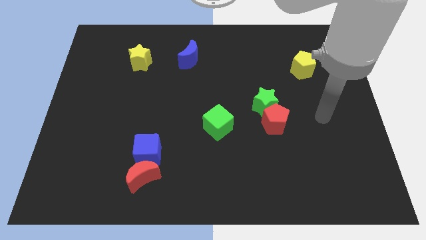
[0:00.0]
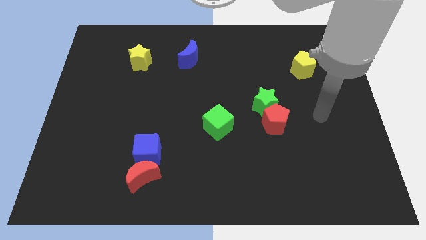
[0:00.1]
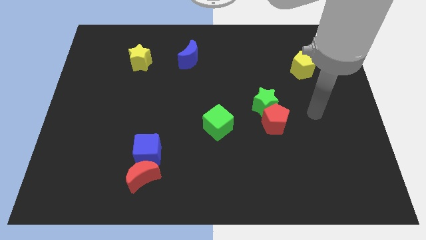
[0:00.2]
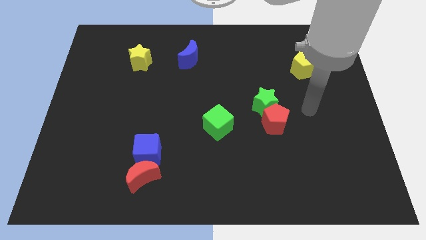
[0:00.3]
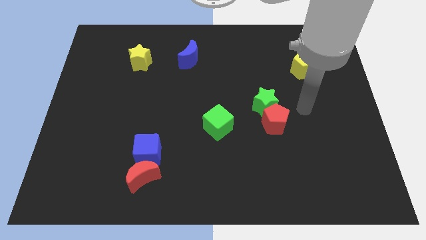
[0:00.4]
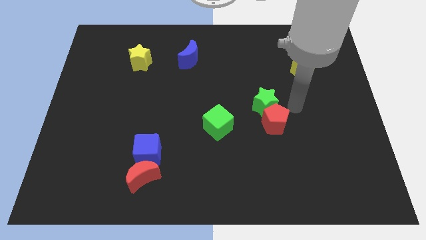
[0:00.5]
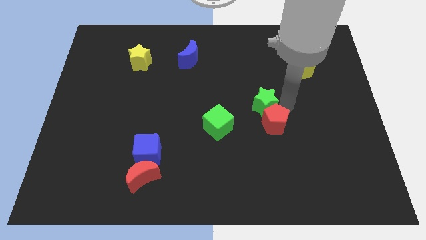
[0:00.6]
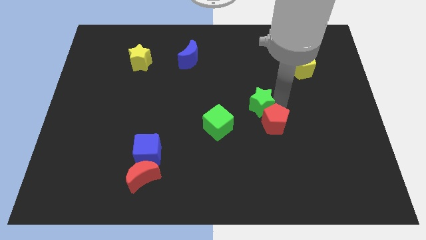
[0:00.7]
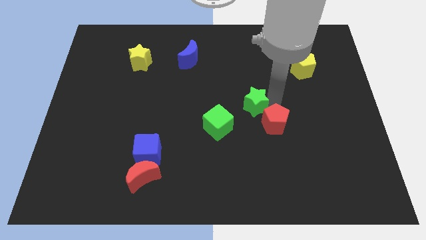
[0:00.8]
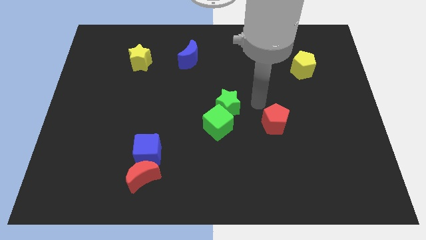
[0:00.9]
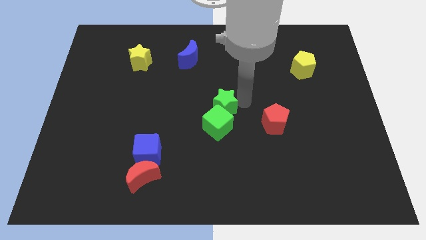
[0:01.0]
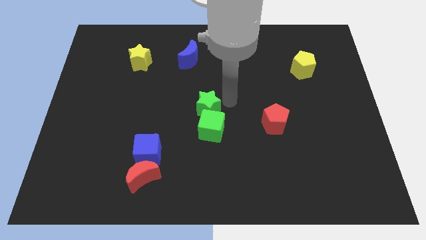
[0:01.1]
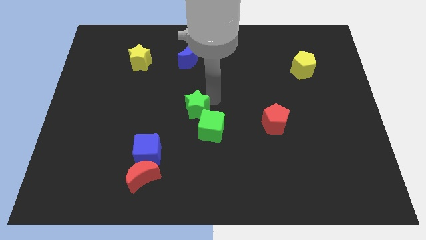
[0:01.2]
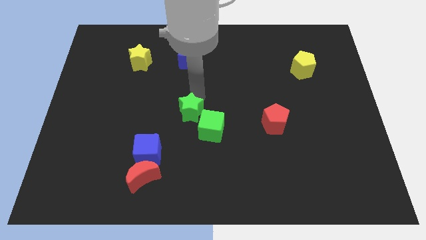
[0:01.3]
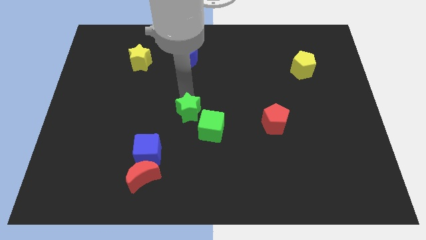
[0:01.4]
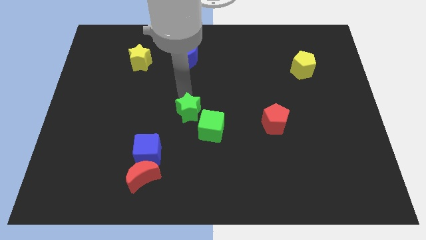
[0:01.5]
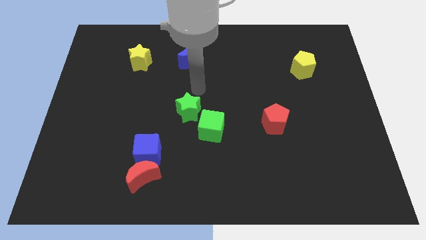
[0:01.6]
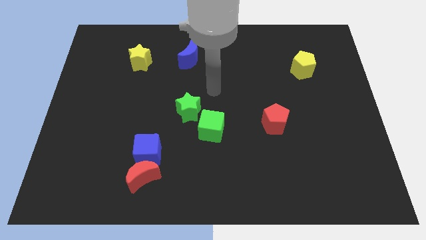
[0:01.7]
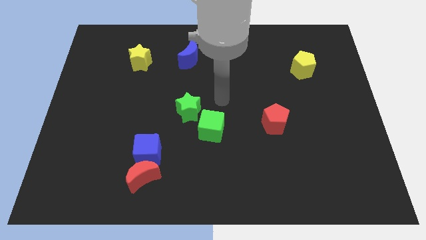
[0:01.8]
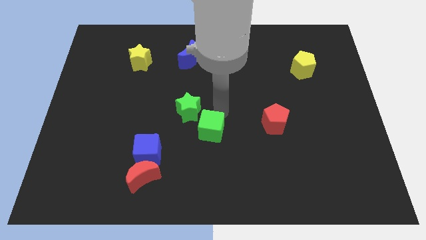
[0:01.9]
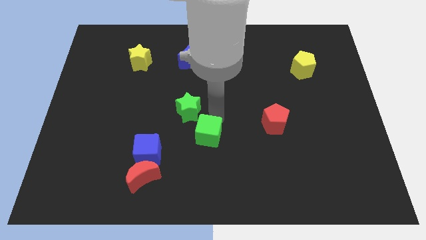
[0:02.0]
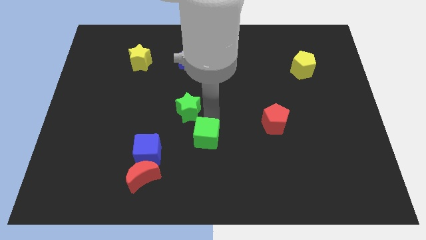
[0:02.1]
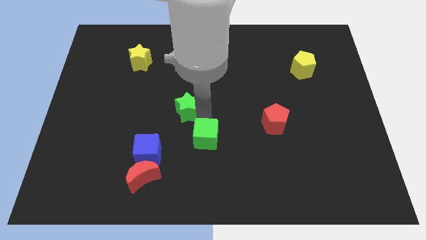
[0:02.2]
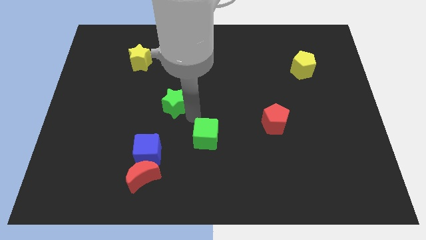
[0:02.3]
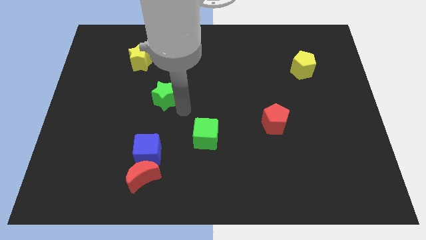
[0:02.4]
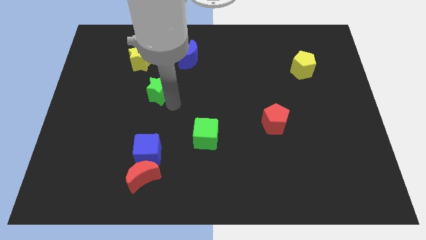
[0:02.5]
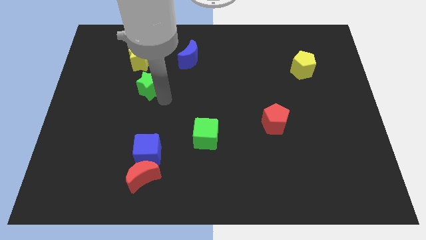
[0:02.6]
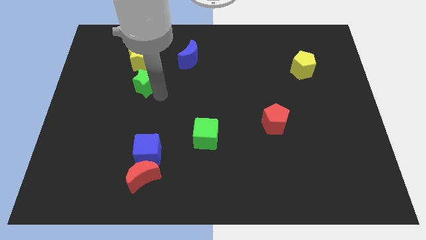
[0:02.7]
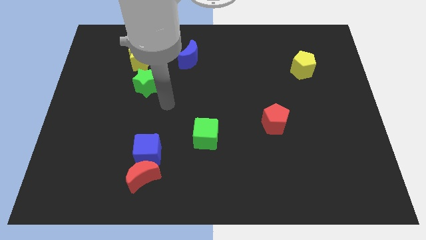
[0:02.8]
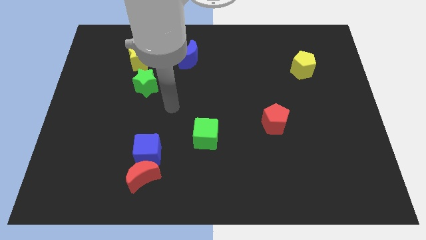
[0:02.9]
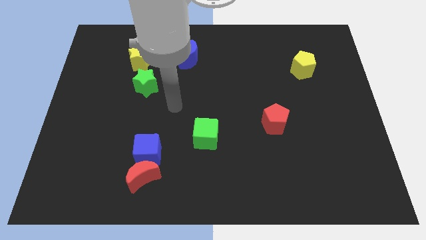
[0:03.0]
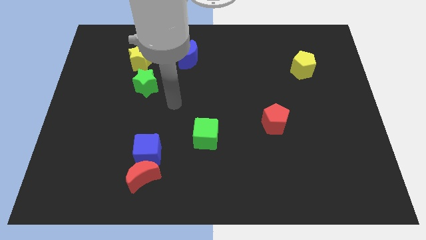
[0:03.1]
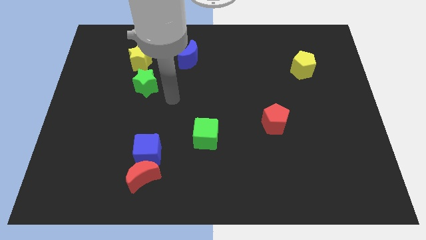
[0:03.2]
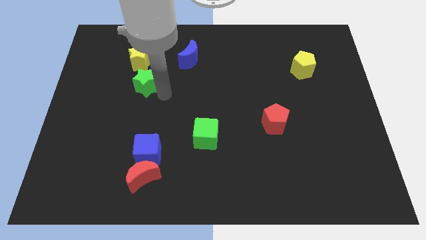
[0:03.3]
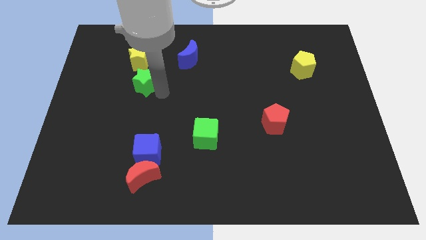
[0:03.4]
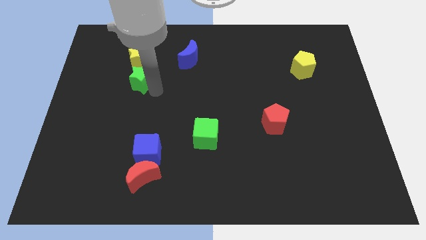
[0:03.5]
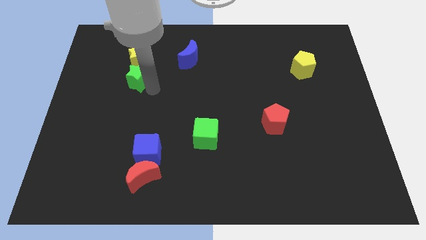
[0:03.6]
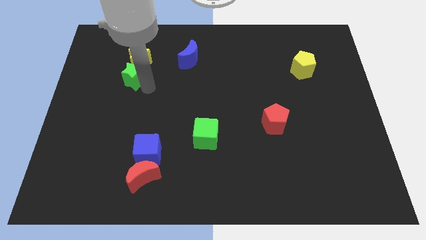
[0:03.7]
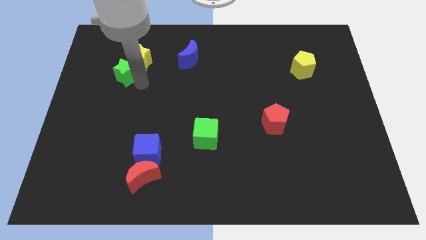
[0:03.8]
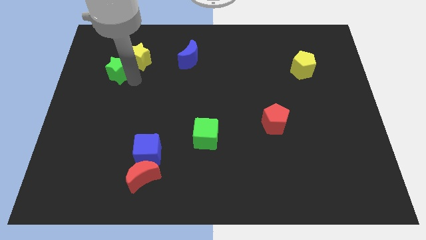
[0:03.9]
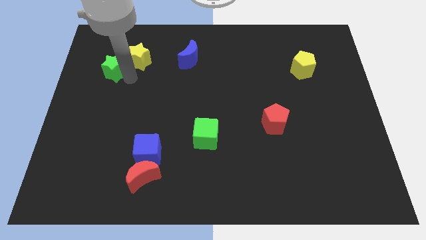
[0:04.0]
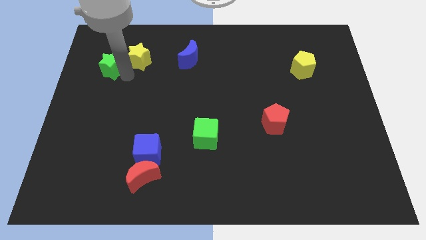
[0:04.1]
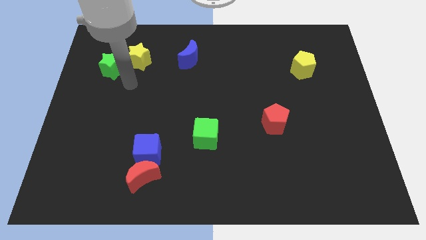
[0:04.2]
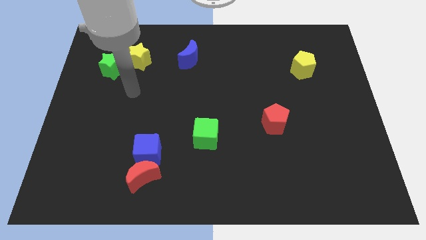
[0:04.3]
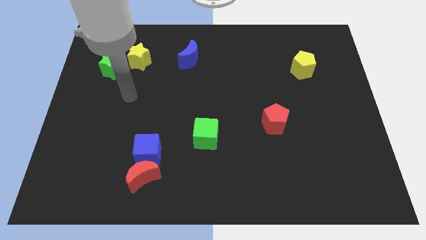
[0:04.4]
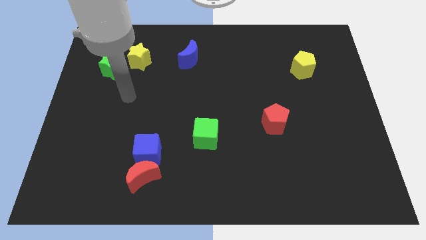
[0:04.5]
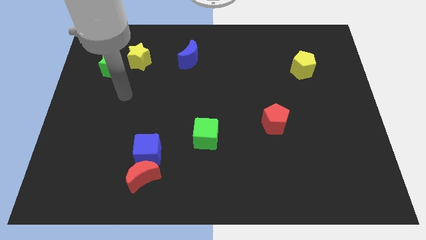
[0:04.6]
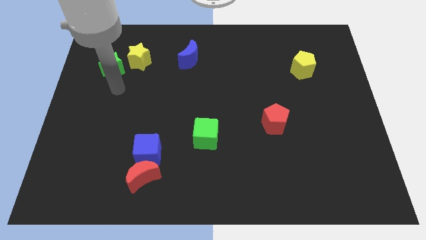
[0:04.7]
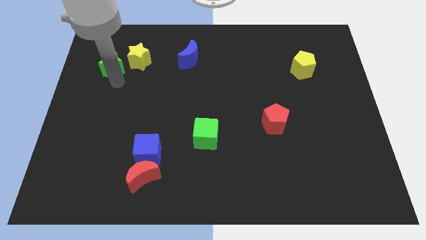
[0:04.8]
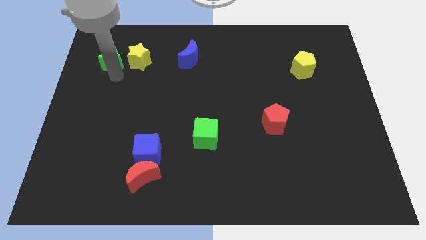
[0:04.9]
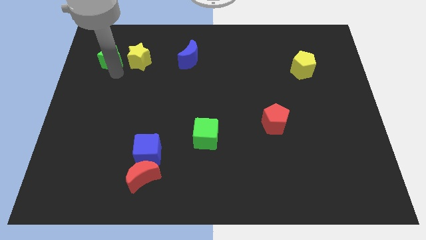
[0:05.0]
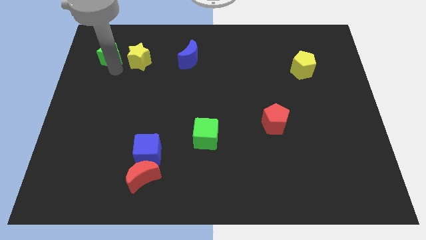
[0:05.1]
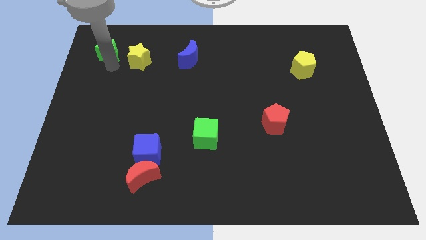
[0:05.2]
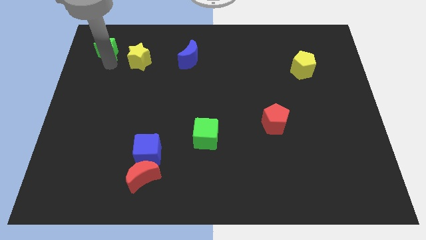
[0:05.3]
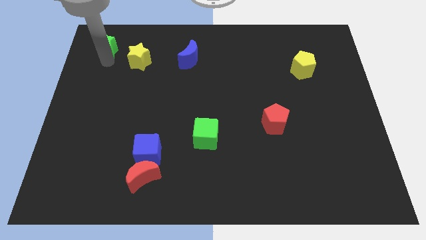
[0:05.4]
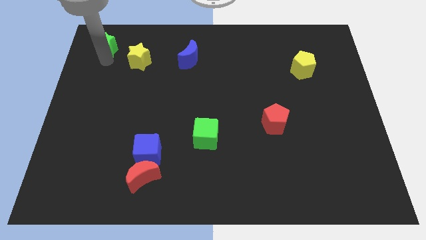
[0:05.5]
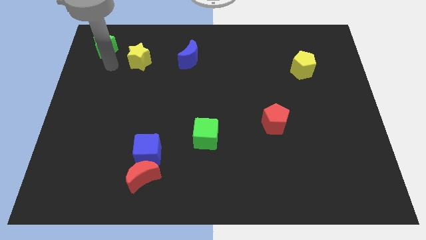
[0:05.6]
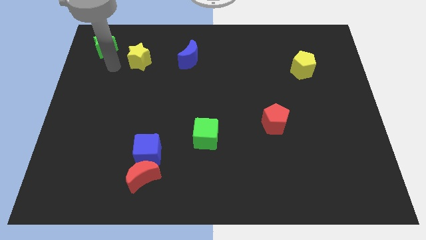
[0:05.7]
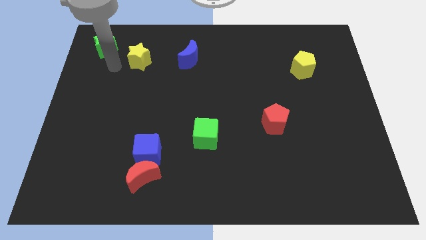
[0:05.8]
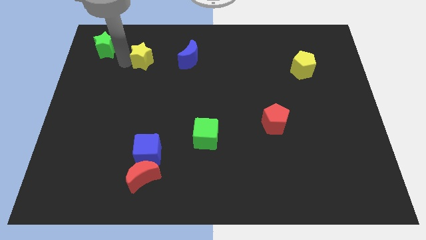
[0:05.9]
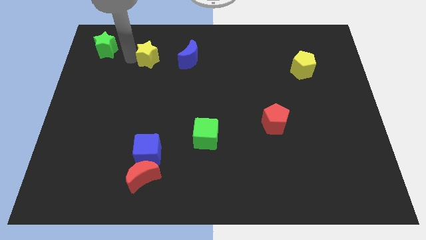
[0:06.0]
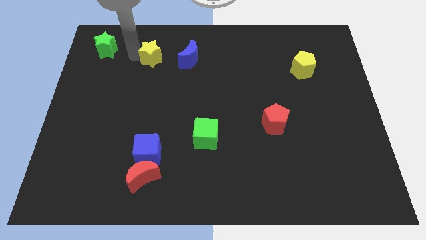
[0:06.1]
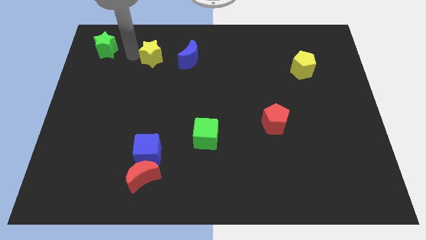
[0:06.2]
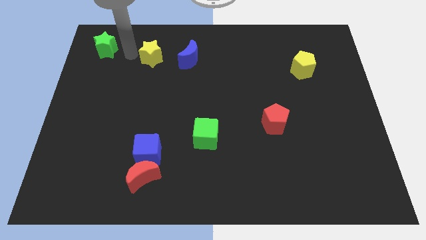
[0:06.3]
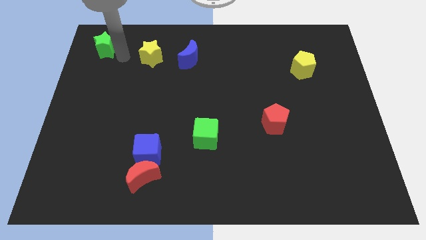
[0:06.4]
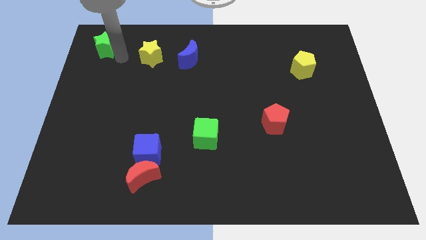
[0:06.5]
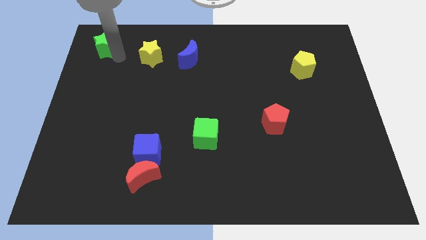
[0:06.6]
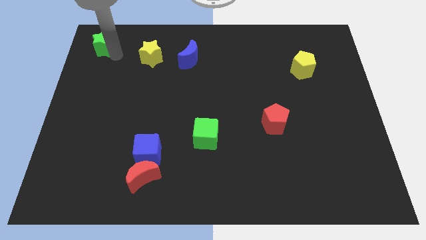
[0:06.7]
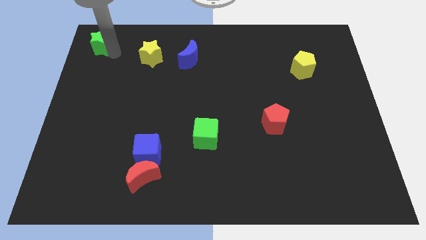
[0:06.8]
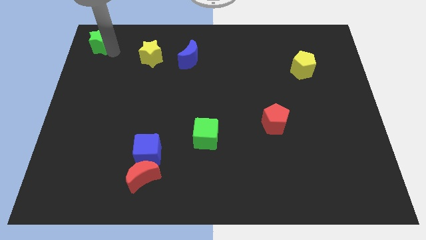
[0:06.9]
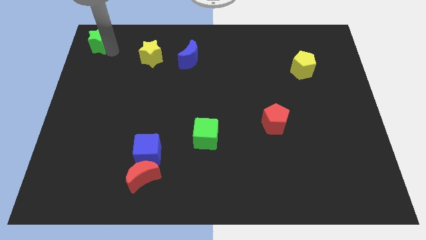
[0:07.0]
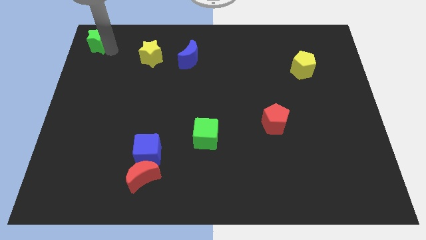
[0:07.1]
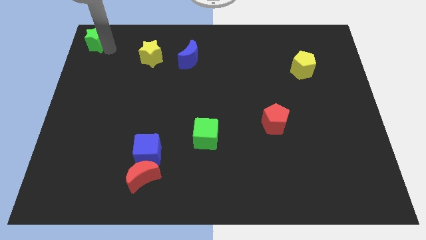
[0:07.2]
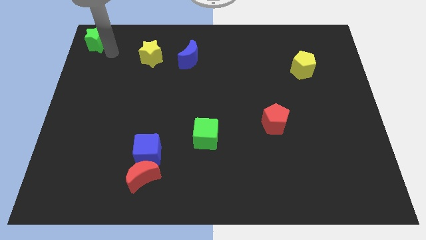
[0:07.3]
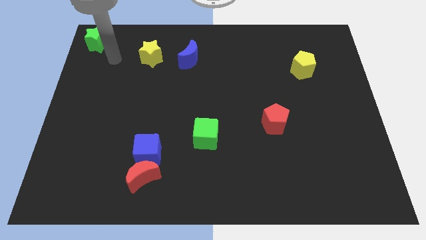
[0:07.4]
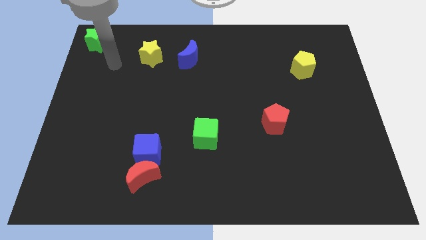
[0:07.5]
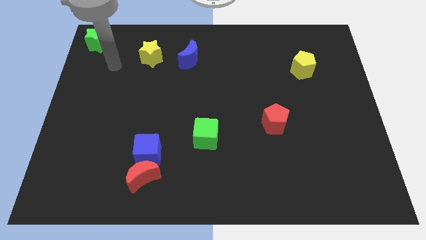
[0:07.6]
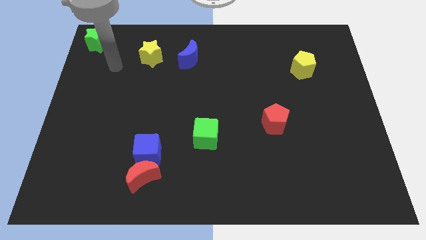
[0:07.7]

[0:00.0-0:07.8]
move green star to the top left corner of the board by moving the blocks by clearing the way

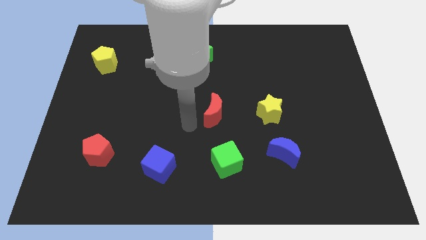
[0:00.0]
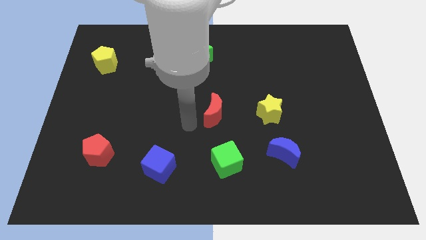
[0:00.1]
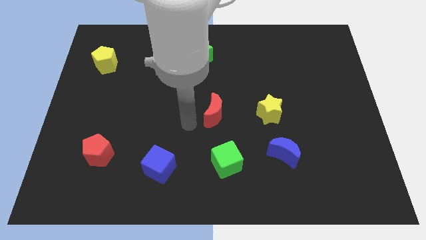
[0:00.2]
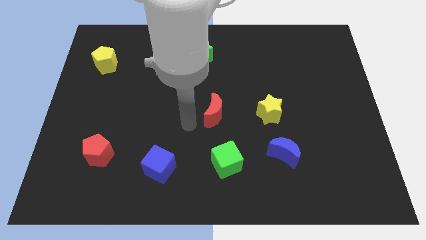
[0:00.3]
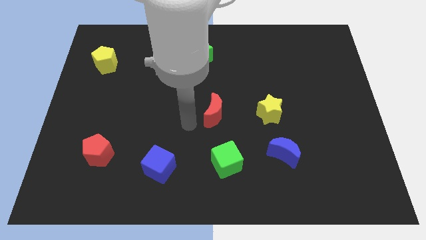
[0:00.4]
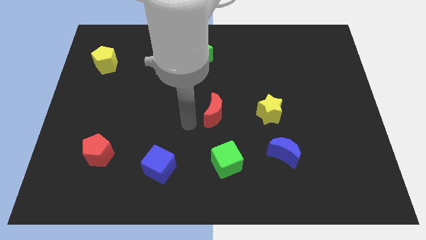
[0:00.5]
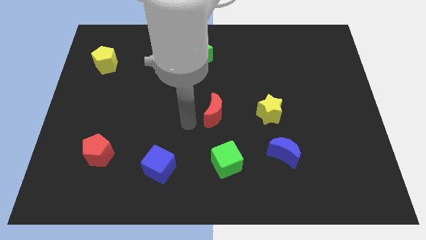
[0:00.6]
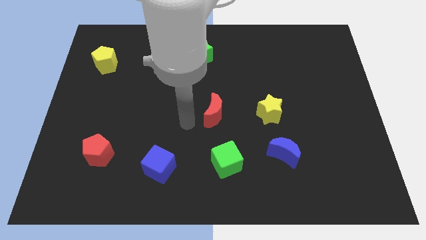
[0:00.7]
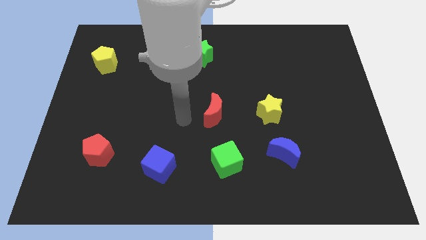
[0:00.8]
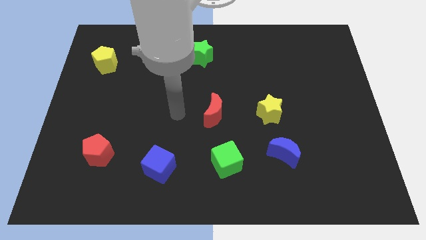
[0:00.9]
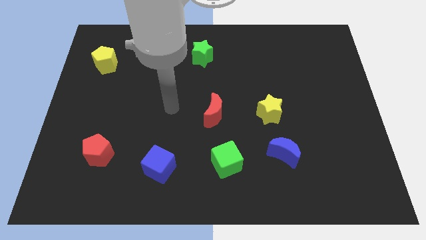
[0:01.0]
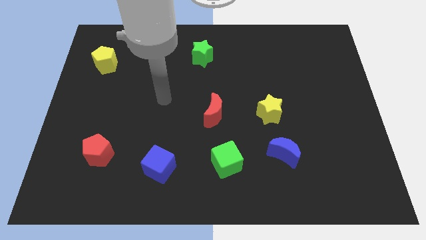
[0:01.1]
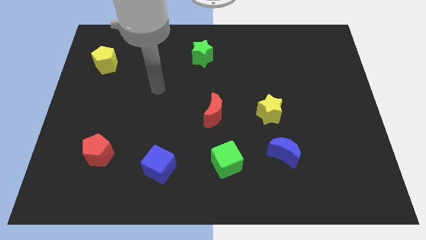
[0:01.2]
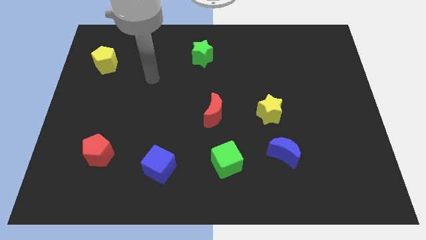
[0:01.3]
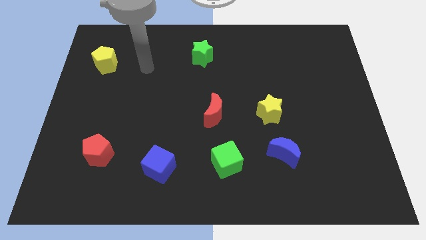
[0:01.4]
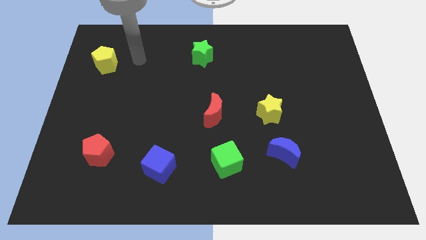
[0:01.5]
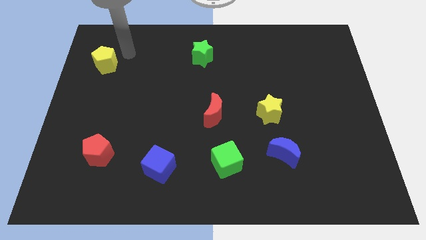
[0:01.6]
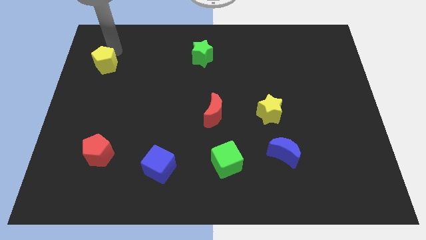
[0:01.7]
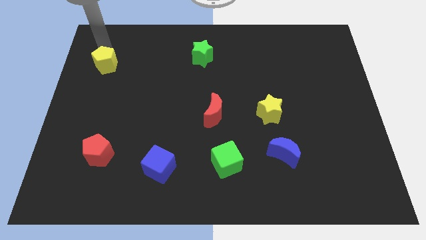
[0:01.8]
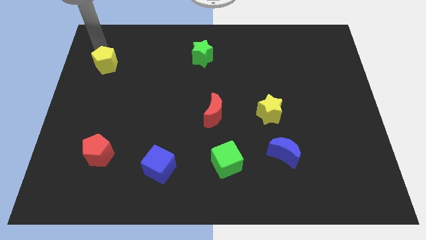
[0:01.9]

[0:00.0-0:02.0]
point the arm at the top of the yellow pentagon
